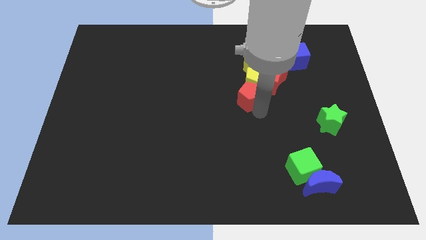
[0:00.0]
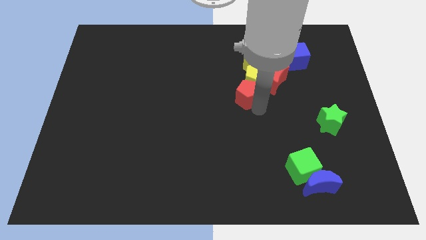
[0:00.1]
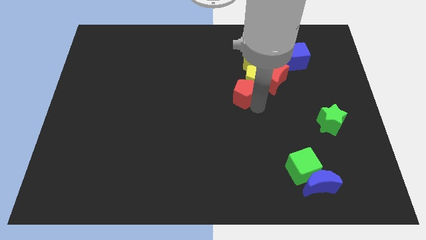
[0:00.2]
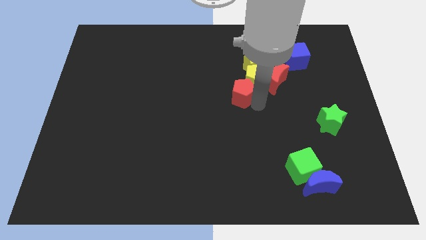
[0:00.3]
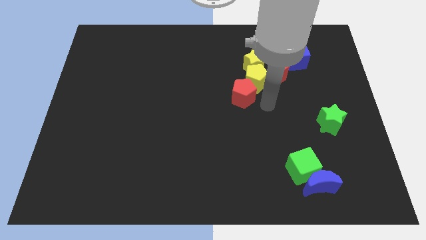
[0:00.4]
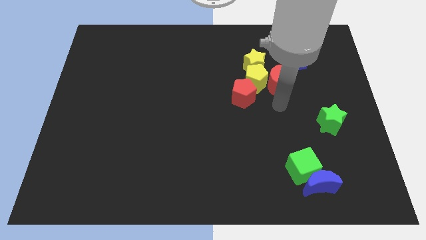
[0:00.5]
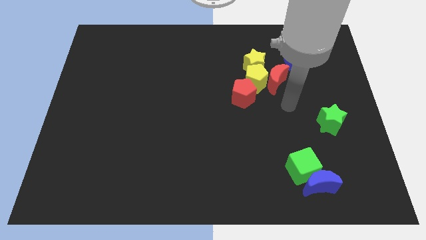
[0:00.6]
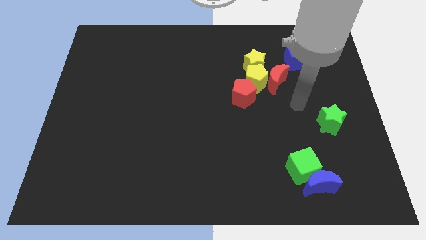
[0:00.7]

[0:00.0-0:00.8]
push the red pentagon to the left of the yellow pentagon

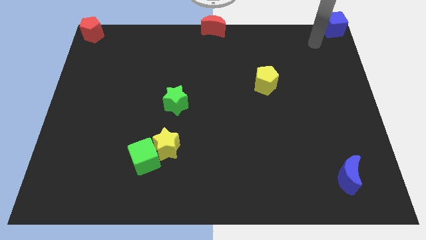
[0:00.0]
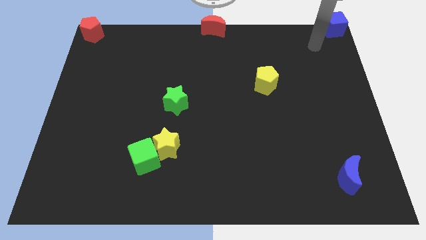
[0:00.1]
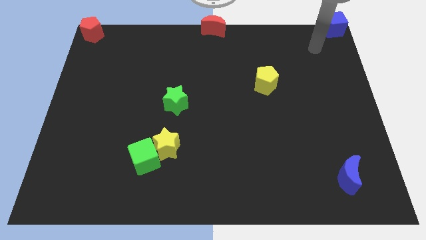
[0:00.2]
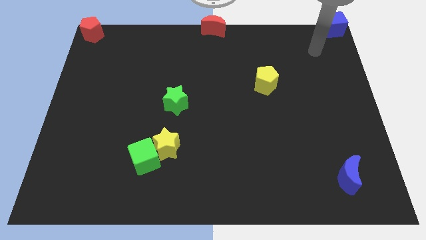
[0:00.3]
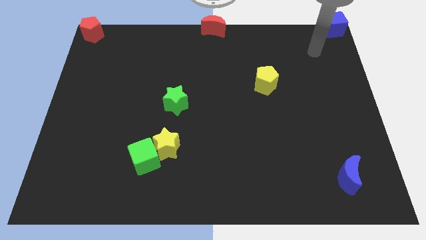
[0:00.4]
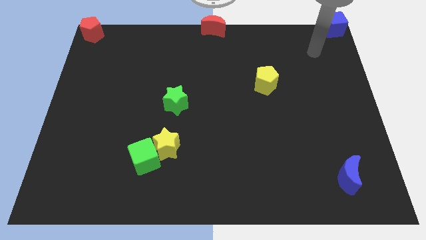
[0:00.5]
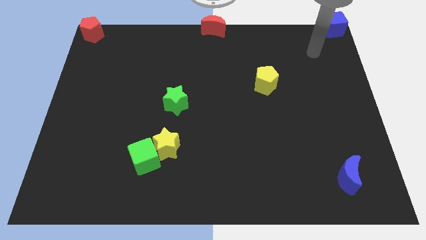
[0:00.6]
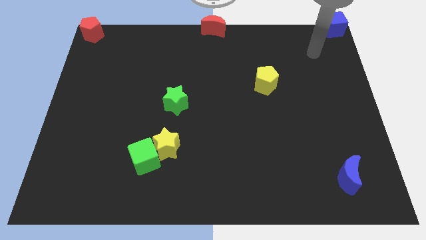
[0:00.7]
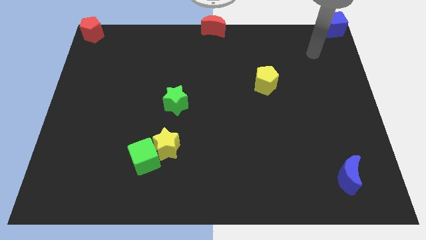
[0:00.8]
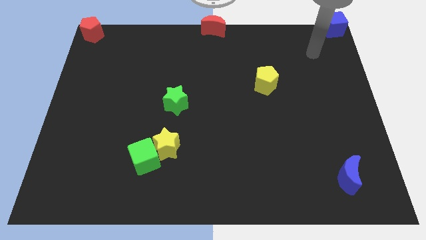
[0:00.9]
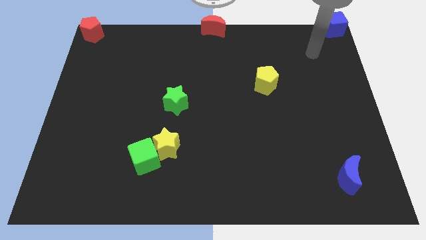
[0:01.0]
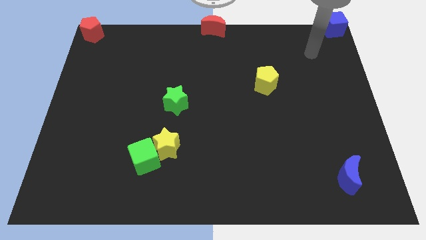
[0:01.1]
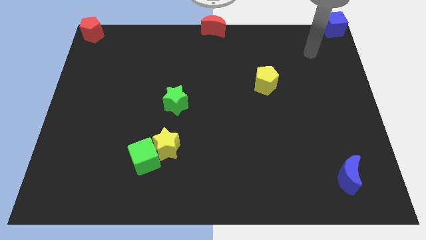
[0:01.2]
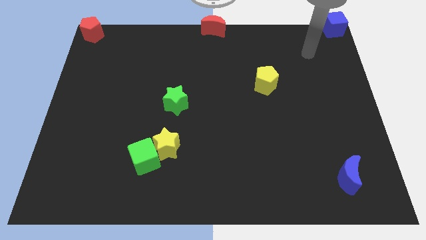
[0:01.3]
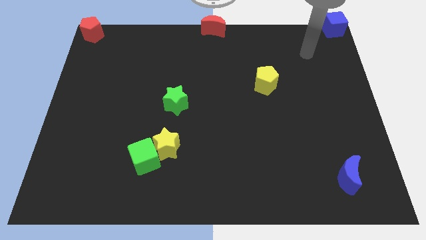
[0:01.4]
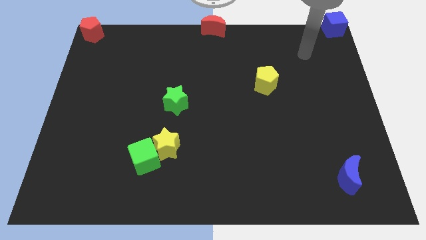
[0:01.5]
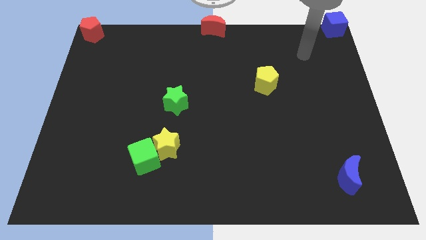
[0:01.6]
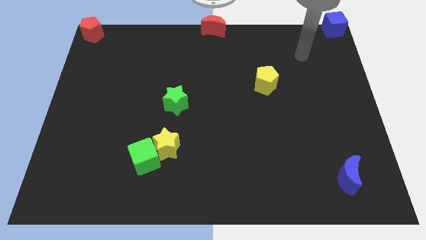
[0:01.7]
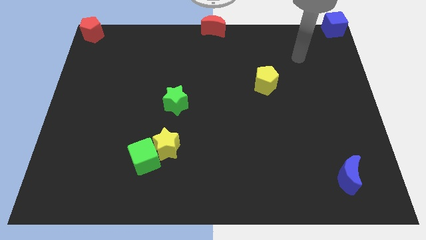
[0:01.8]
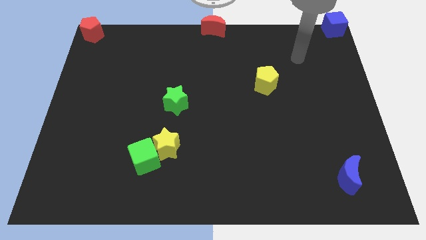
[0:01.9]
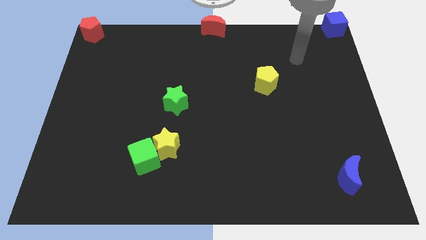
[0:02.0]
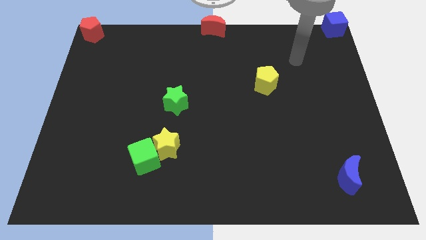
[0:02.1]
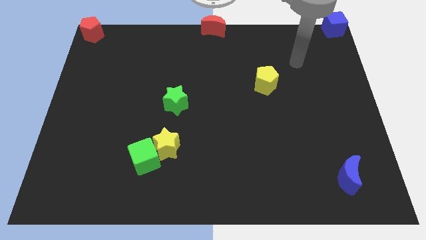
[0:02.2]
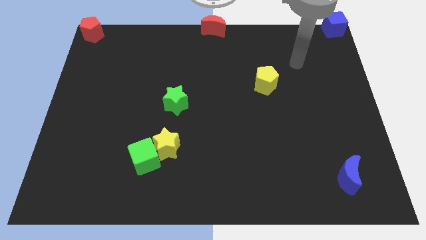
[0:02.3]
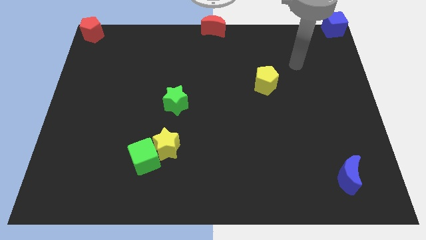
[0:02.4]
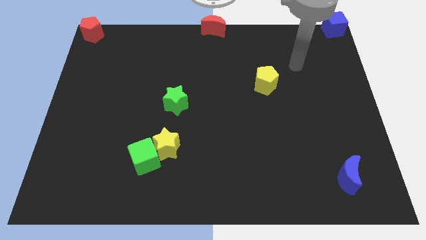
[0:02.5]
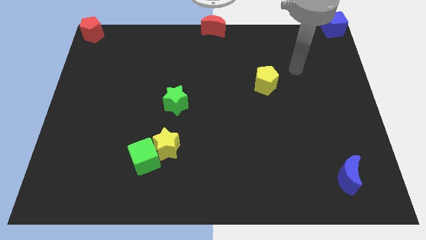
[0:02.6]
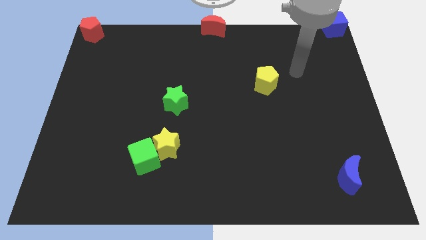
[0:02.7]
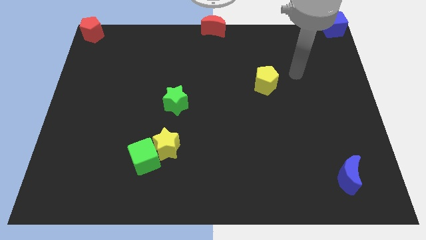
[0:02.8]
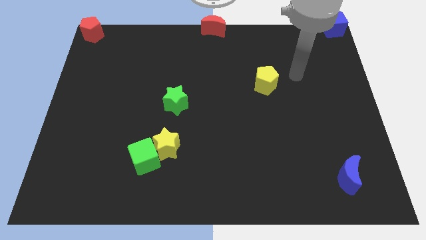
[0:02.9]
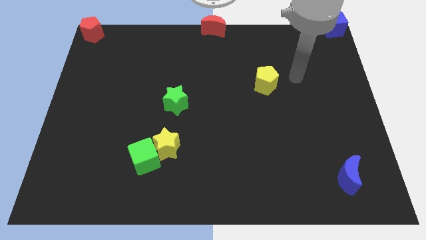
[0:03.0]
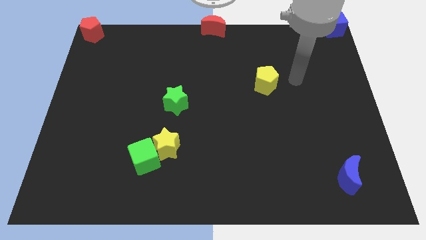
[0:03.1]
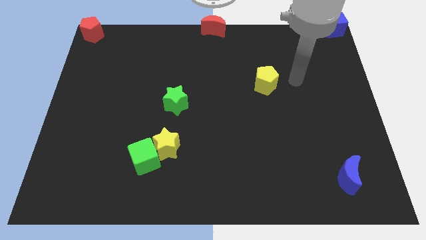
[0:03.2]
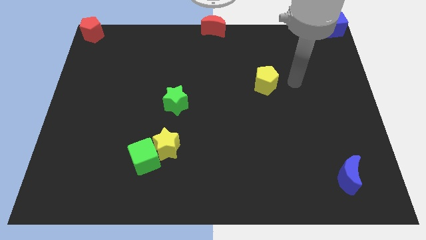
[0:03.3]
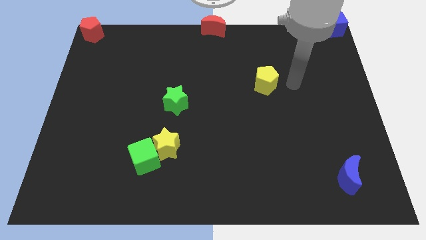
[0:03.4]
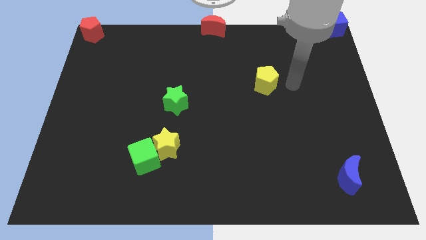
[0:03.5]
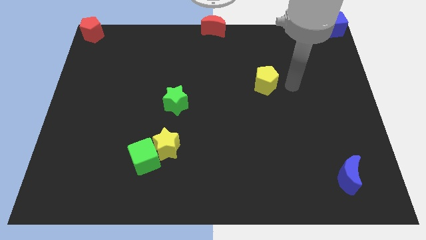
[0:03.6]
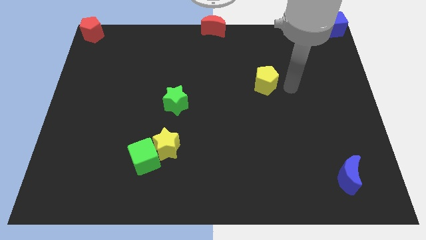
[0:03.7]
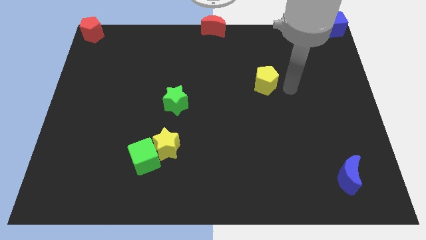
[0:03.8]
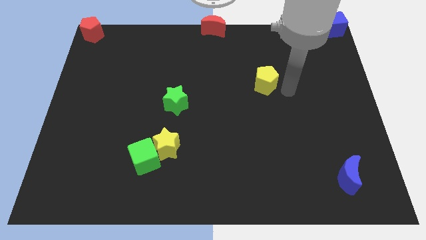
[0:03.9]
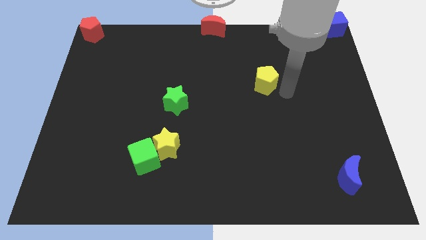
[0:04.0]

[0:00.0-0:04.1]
move your hand near the yellow pentagon

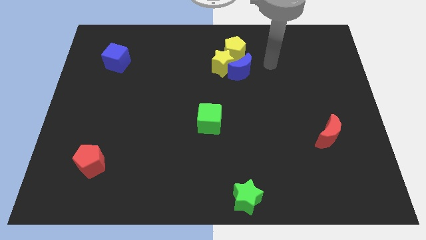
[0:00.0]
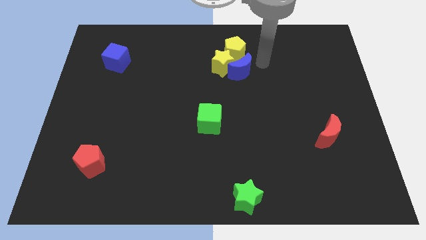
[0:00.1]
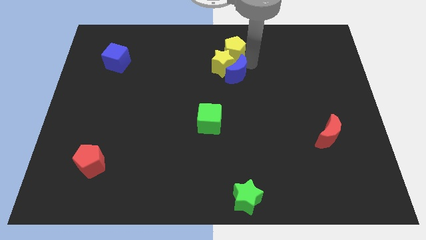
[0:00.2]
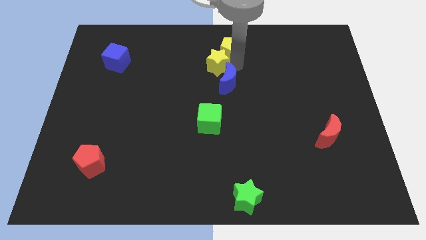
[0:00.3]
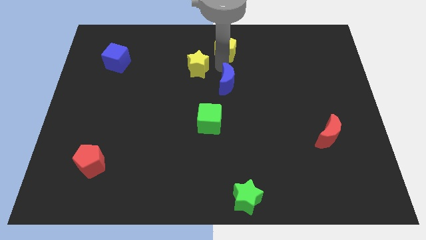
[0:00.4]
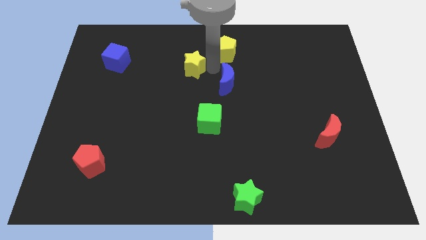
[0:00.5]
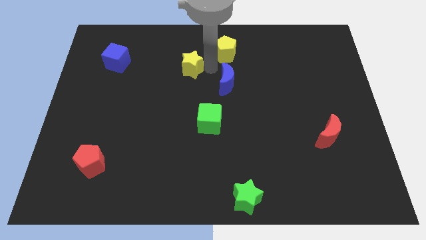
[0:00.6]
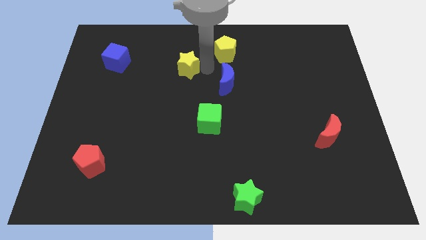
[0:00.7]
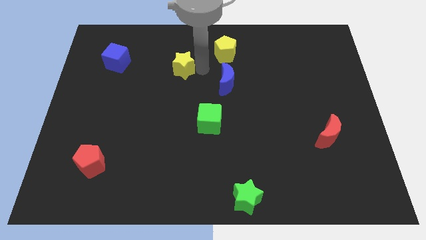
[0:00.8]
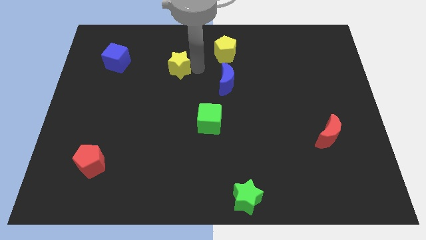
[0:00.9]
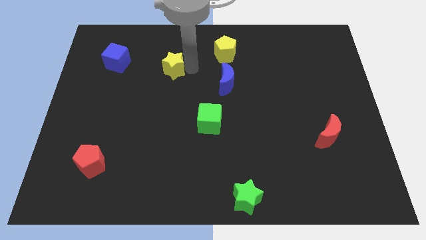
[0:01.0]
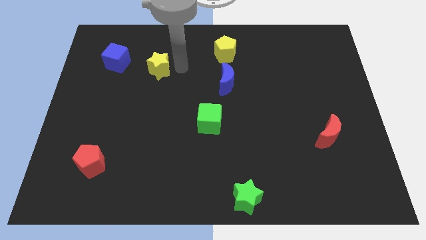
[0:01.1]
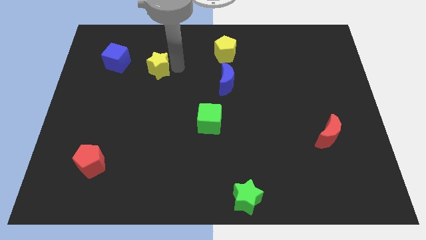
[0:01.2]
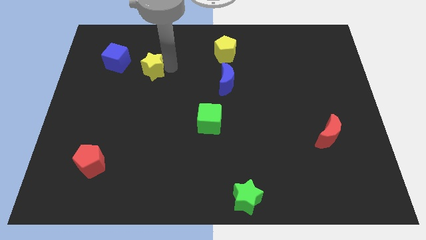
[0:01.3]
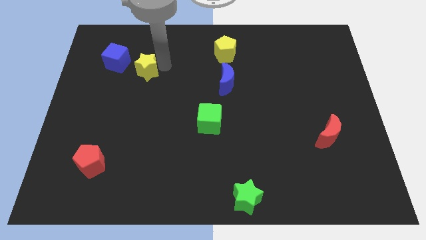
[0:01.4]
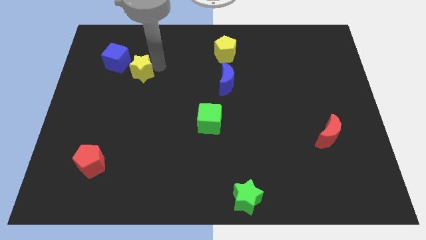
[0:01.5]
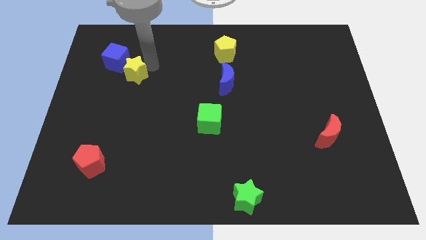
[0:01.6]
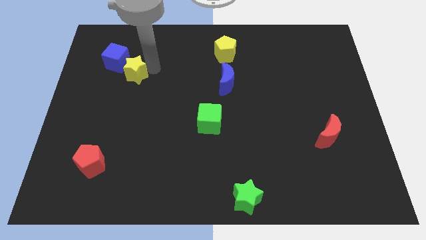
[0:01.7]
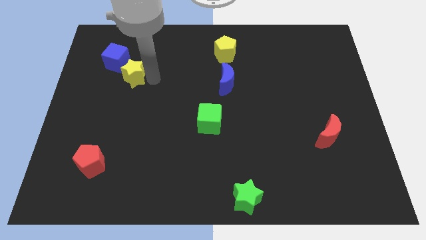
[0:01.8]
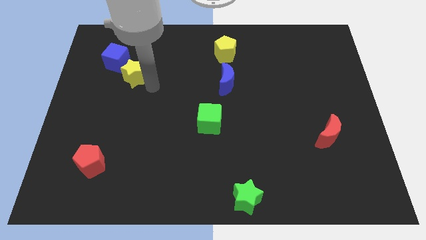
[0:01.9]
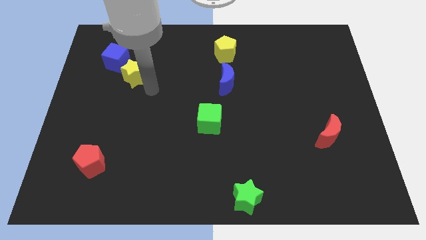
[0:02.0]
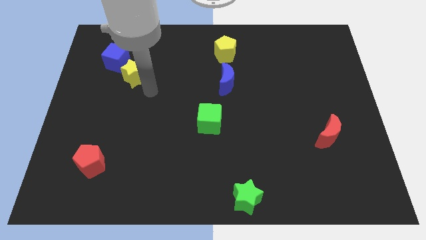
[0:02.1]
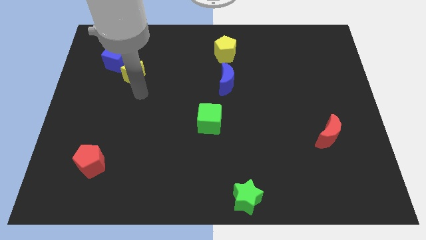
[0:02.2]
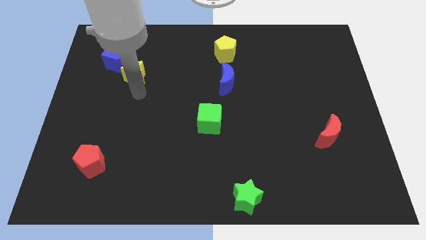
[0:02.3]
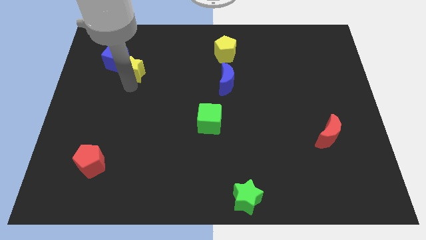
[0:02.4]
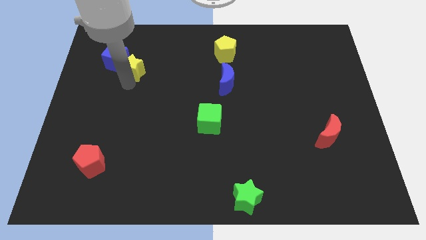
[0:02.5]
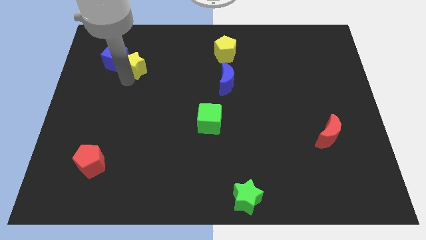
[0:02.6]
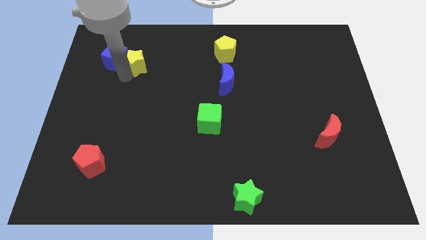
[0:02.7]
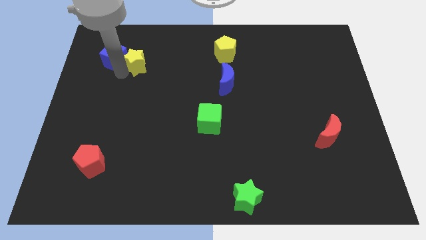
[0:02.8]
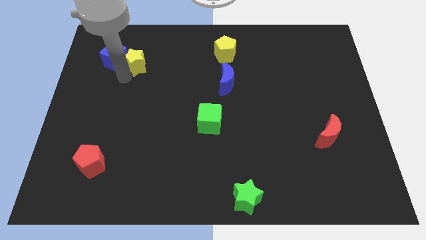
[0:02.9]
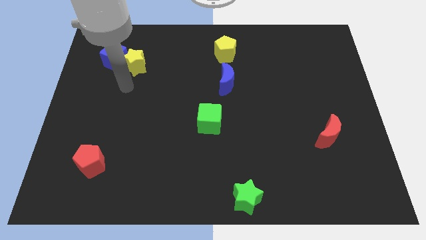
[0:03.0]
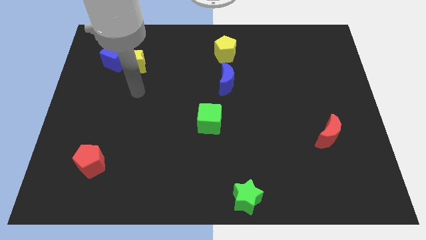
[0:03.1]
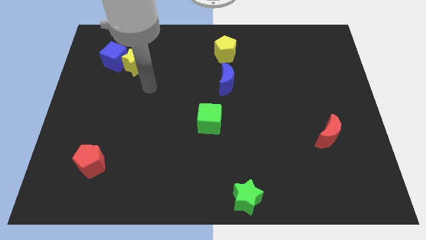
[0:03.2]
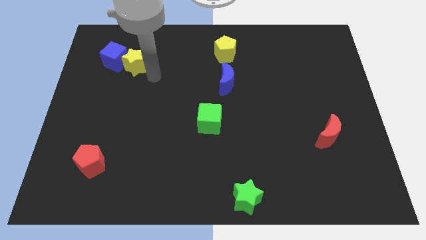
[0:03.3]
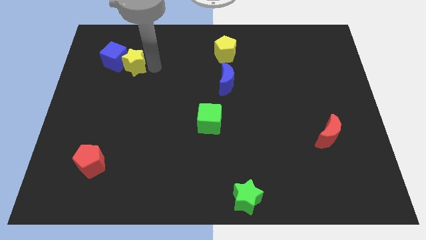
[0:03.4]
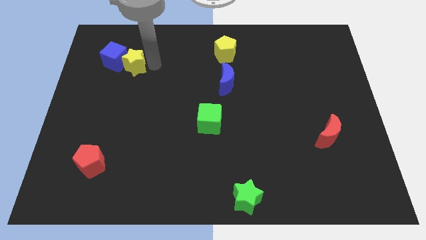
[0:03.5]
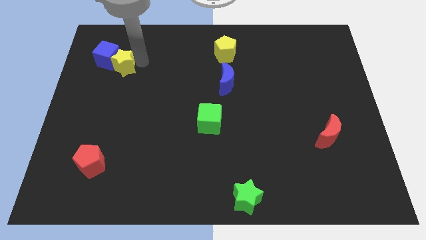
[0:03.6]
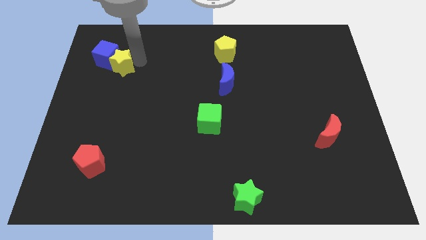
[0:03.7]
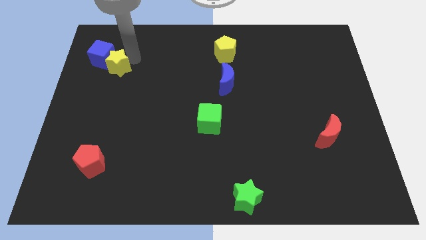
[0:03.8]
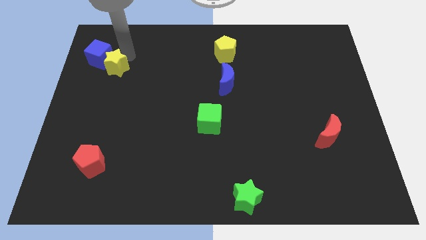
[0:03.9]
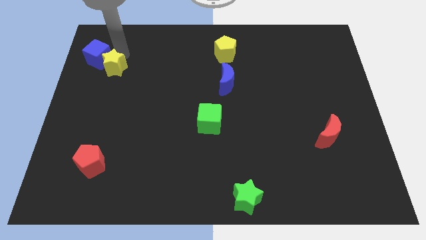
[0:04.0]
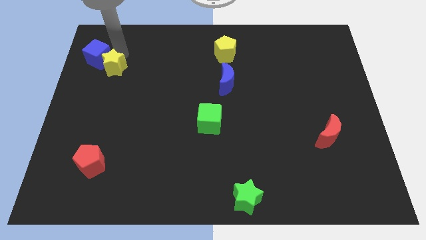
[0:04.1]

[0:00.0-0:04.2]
push the yellow star into the blue cube
